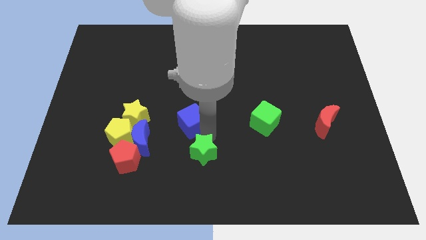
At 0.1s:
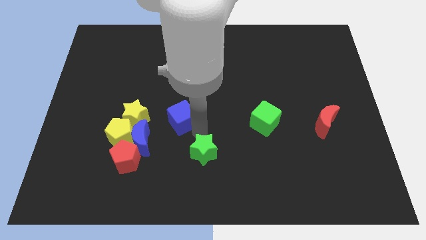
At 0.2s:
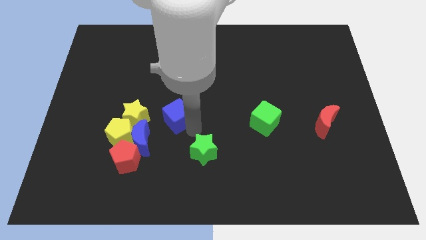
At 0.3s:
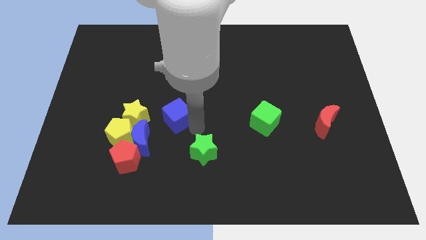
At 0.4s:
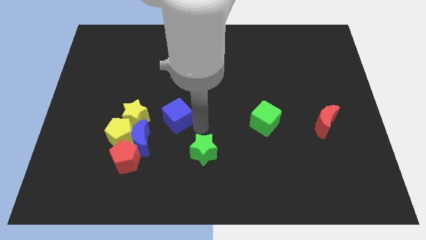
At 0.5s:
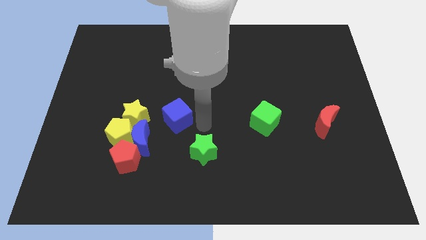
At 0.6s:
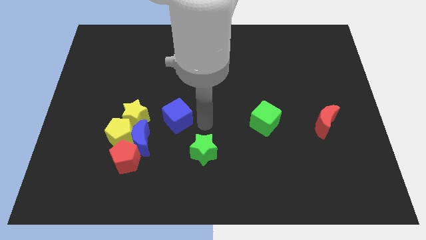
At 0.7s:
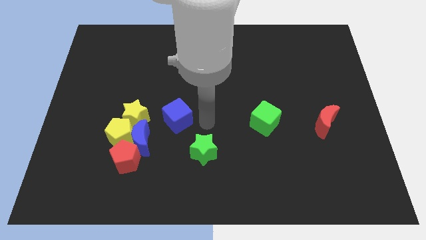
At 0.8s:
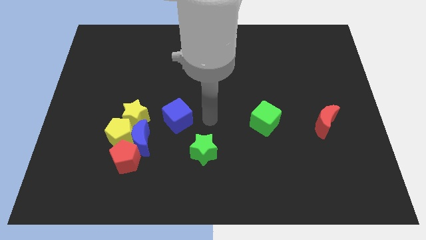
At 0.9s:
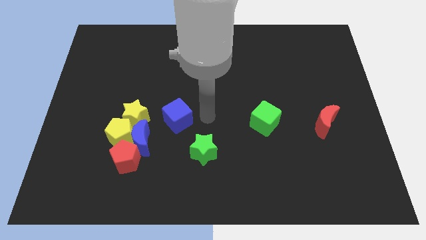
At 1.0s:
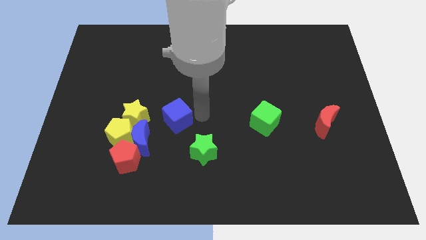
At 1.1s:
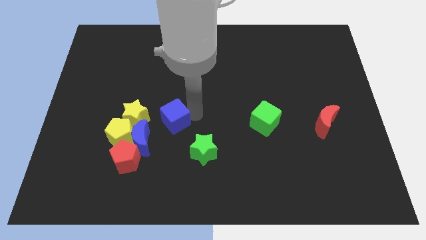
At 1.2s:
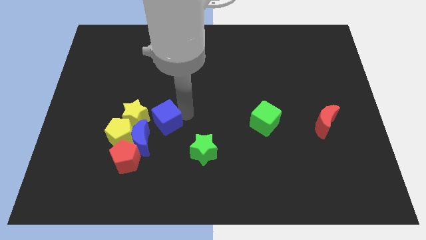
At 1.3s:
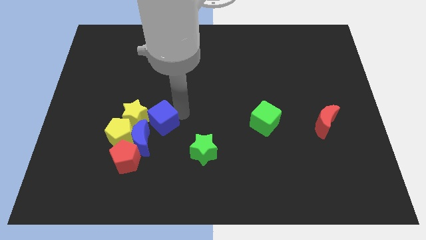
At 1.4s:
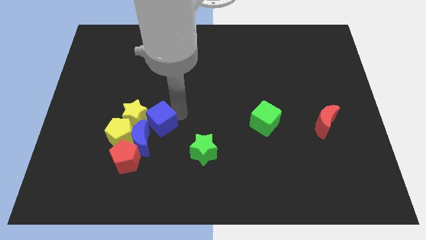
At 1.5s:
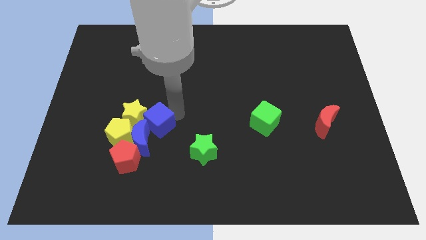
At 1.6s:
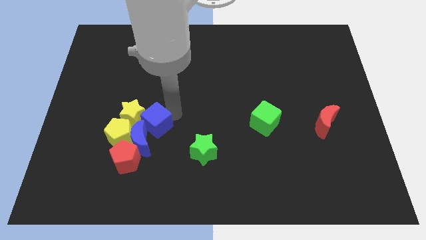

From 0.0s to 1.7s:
push the blue cube into the group of blocks

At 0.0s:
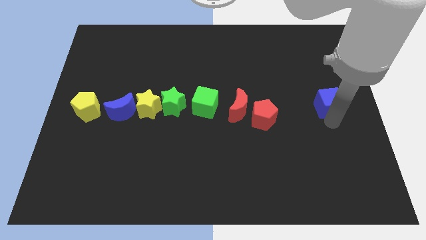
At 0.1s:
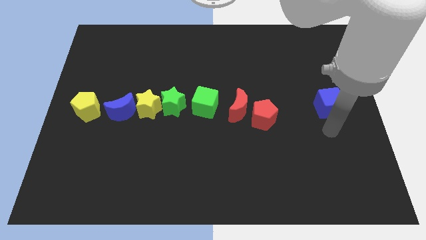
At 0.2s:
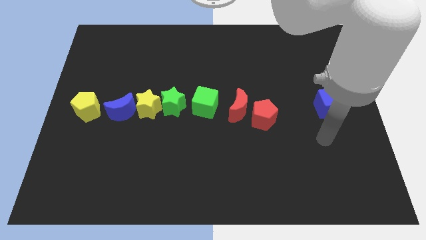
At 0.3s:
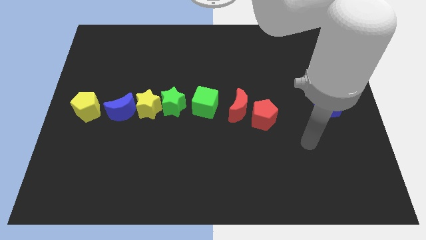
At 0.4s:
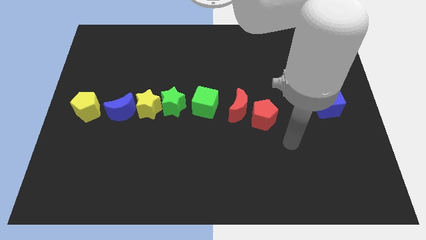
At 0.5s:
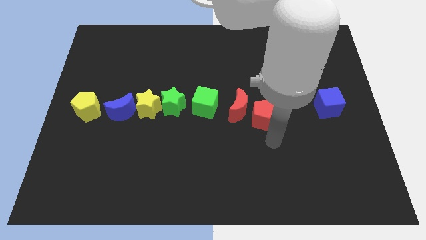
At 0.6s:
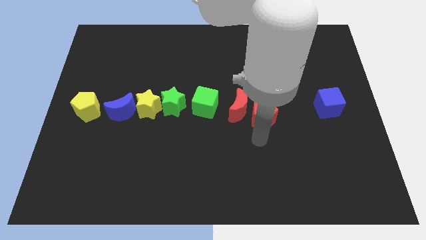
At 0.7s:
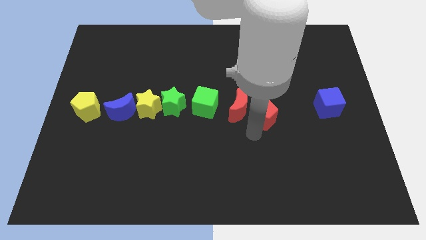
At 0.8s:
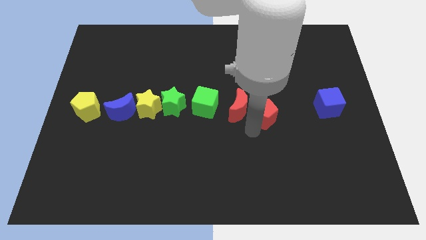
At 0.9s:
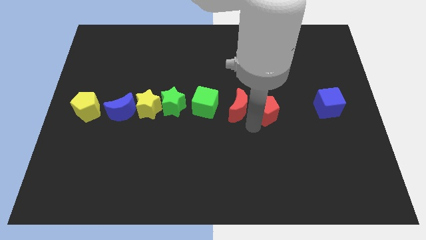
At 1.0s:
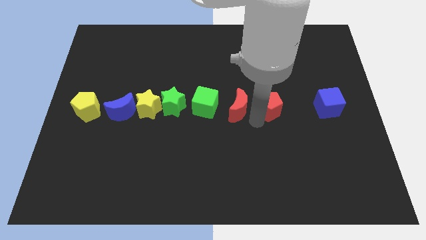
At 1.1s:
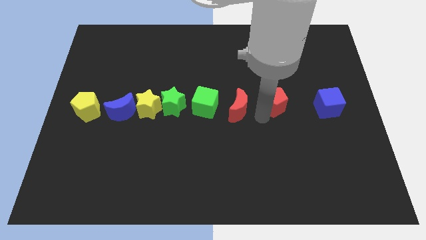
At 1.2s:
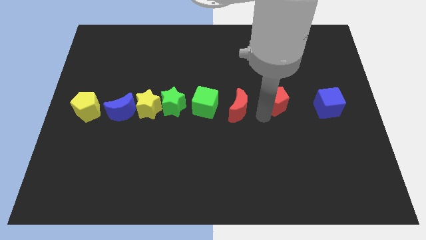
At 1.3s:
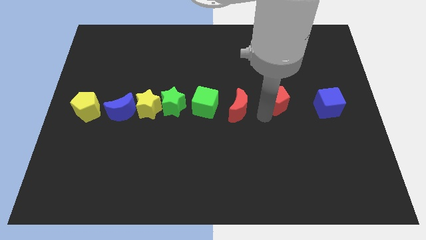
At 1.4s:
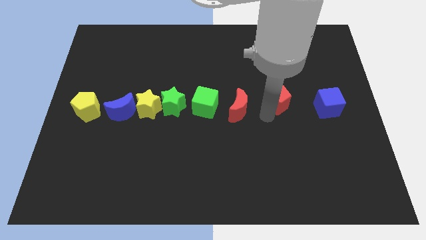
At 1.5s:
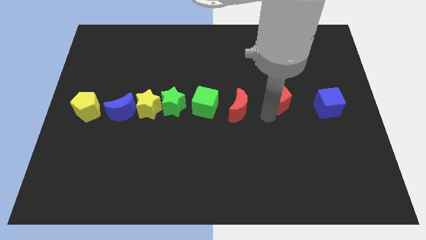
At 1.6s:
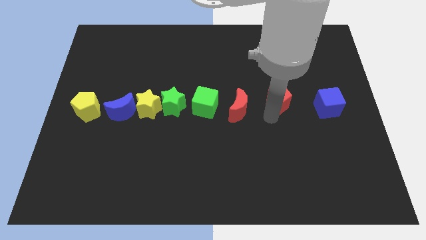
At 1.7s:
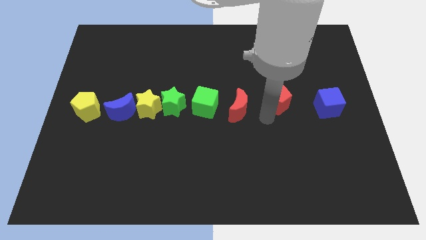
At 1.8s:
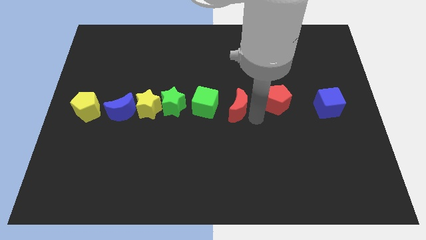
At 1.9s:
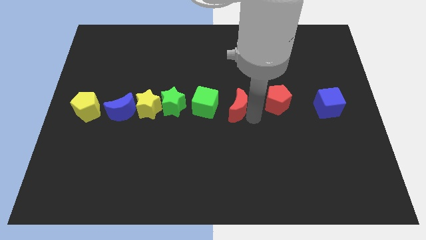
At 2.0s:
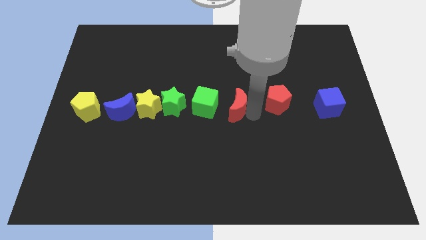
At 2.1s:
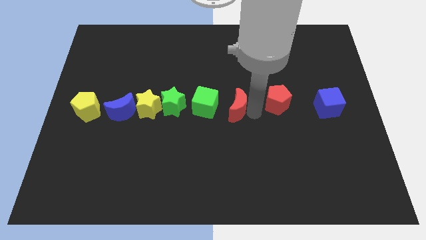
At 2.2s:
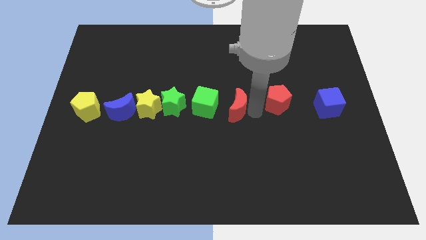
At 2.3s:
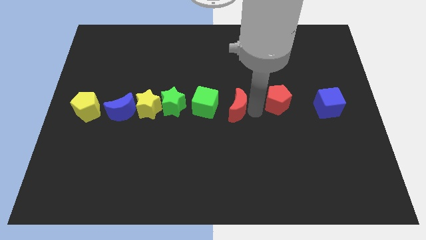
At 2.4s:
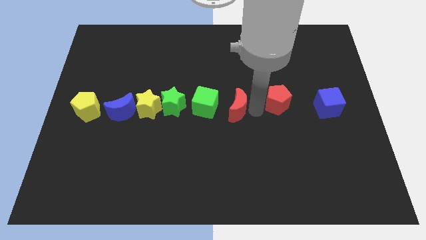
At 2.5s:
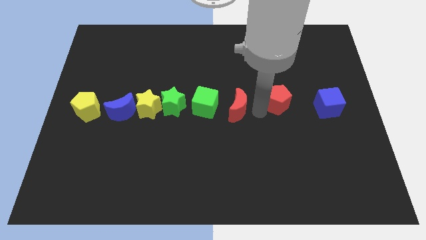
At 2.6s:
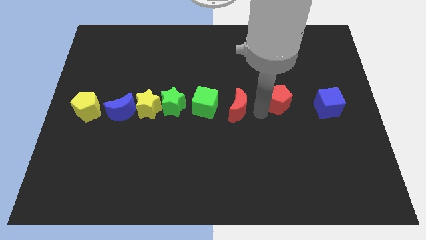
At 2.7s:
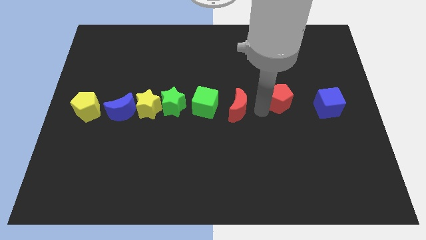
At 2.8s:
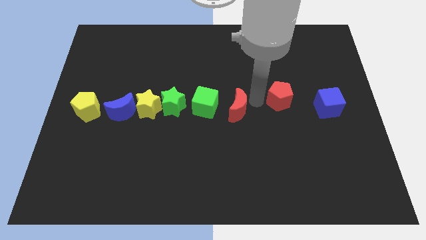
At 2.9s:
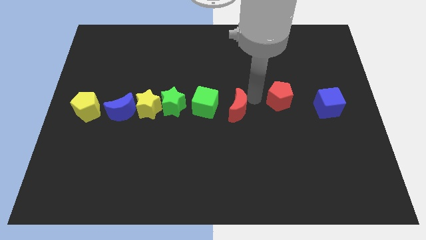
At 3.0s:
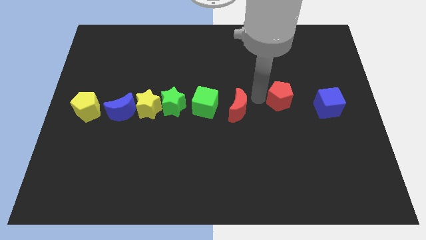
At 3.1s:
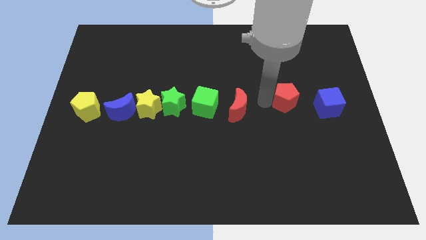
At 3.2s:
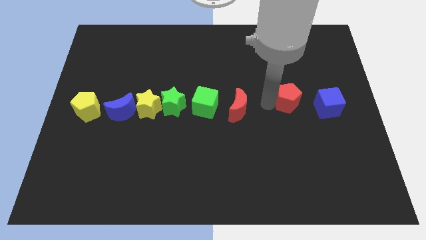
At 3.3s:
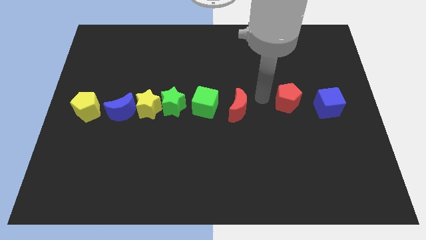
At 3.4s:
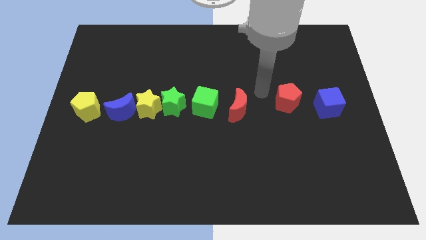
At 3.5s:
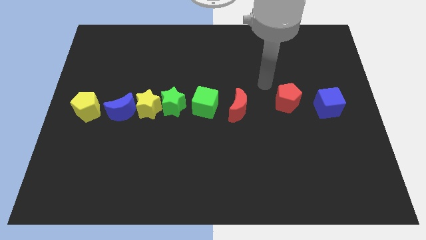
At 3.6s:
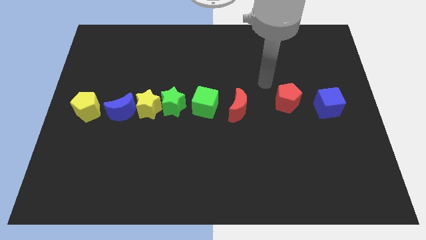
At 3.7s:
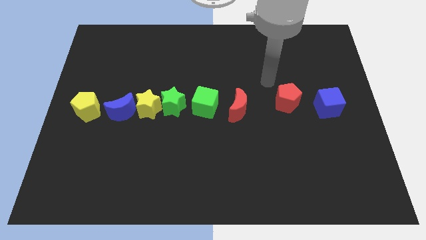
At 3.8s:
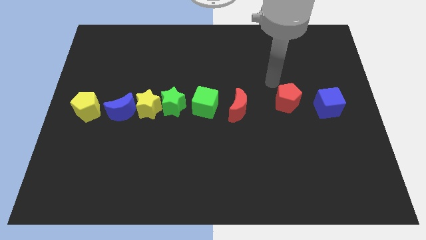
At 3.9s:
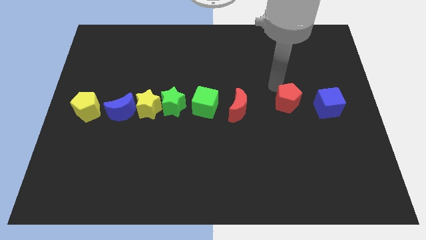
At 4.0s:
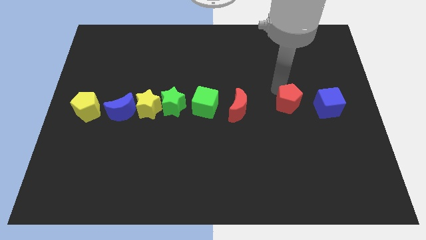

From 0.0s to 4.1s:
push the red pentagon closer to the blue cube

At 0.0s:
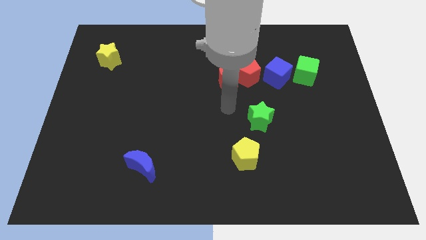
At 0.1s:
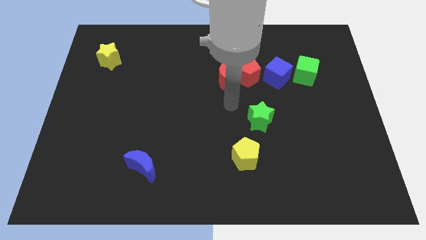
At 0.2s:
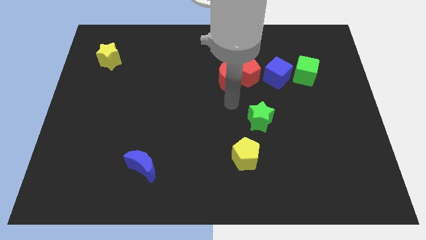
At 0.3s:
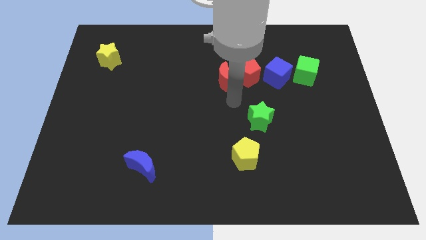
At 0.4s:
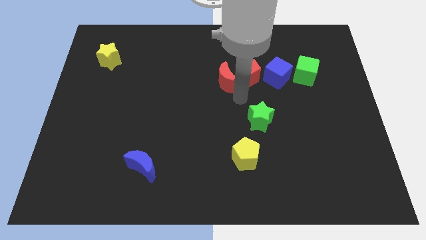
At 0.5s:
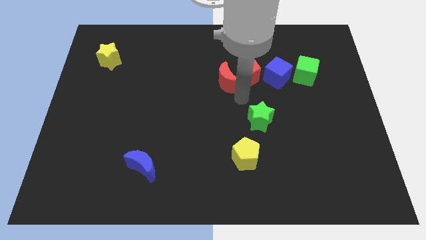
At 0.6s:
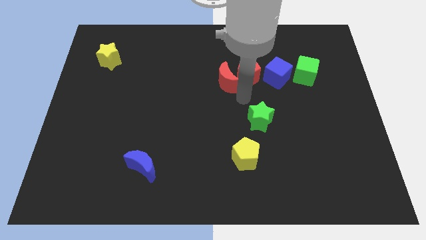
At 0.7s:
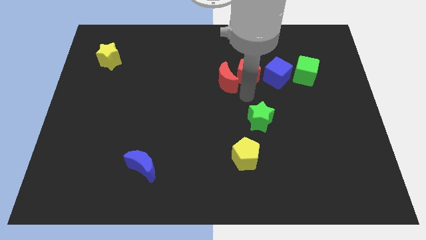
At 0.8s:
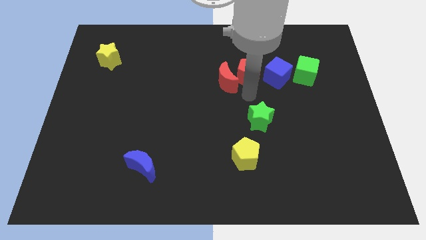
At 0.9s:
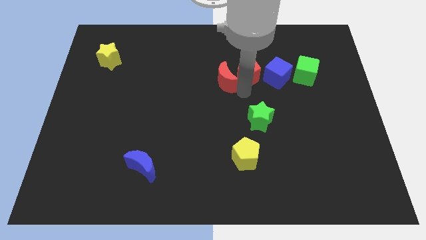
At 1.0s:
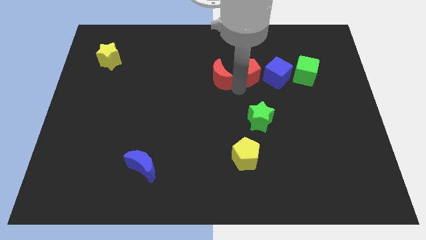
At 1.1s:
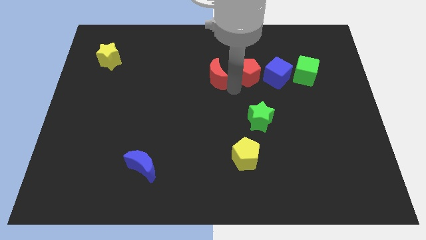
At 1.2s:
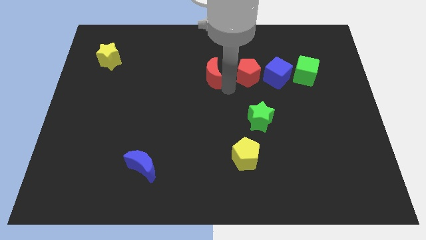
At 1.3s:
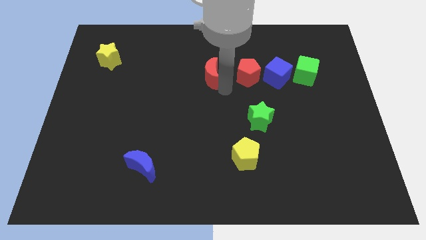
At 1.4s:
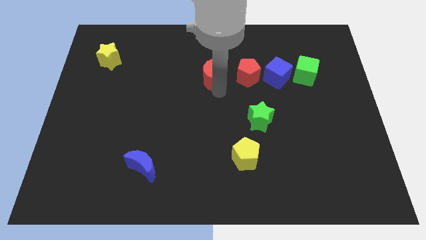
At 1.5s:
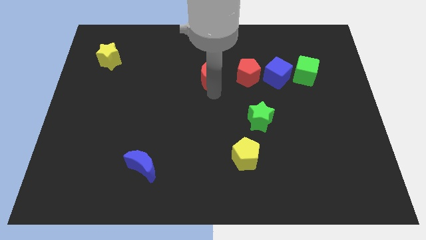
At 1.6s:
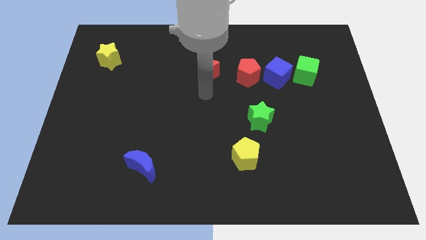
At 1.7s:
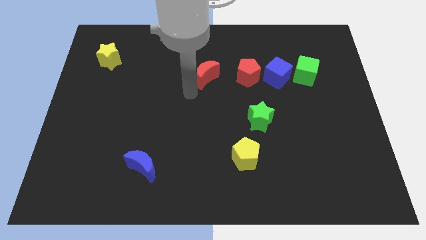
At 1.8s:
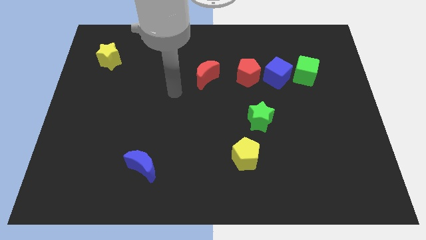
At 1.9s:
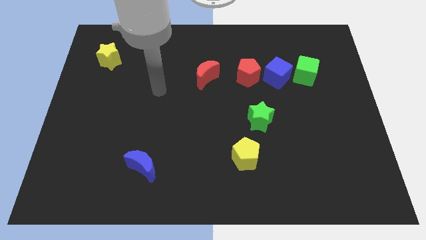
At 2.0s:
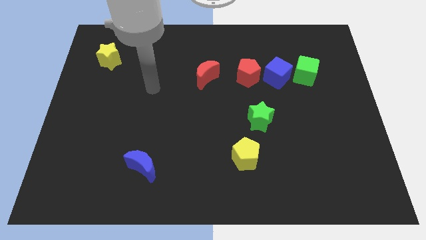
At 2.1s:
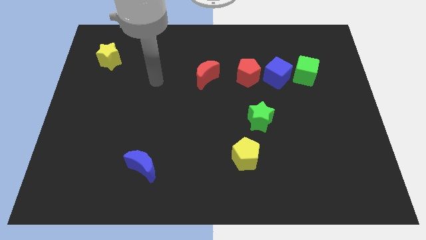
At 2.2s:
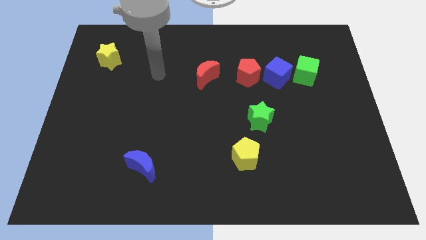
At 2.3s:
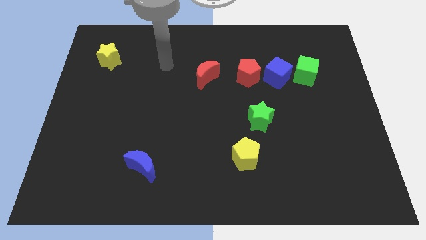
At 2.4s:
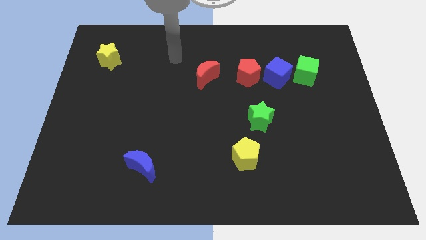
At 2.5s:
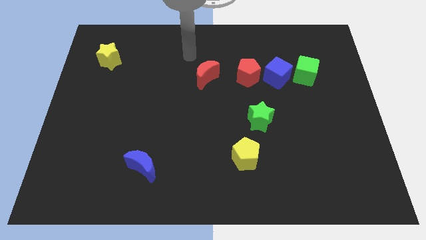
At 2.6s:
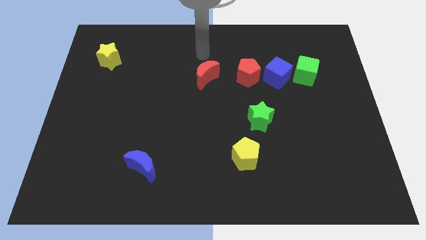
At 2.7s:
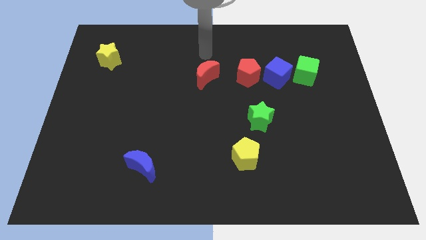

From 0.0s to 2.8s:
separate the red crescent from the red pentagon

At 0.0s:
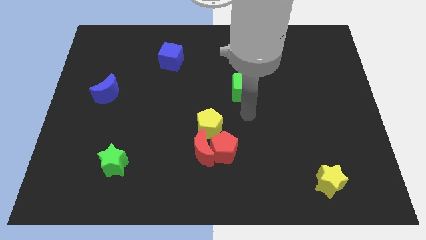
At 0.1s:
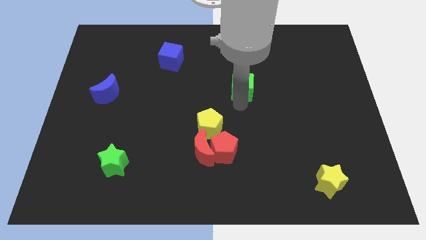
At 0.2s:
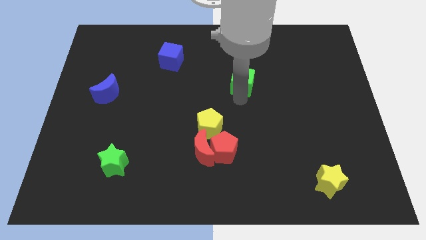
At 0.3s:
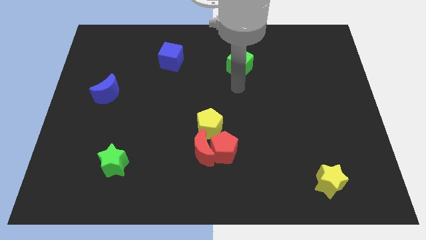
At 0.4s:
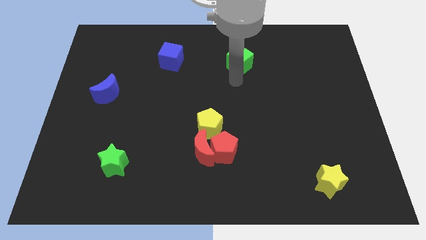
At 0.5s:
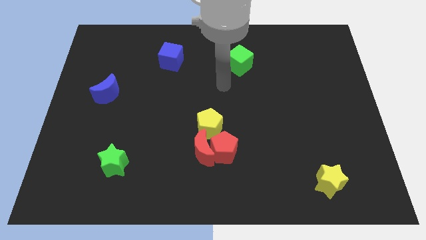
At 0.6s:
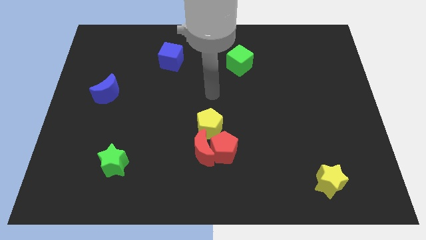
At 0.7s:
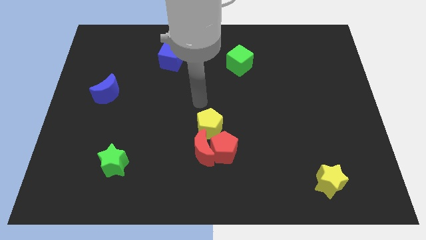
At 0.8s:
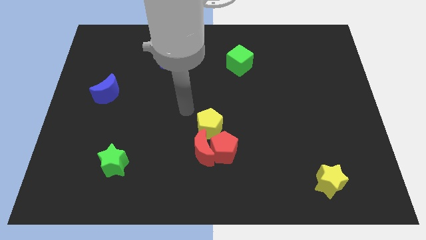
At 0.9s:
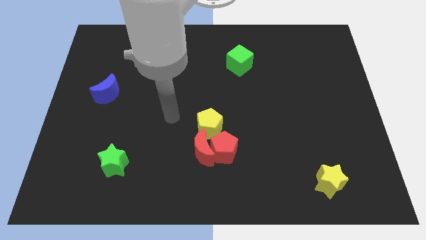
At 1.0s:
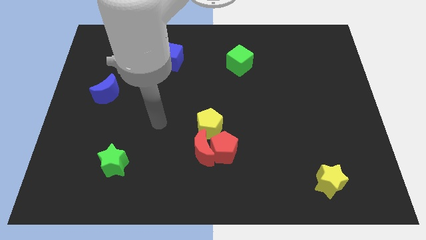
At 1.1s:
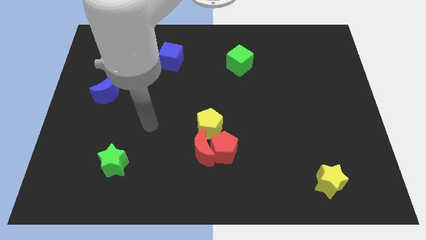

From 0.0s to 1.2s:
place the green cube right to the blue cube
